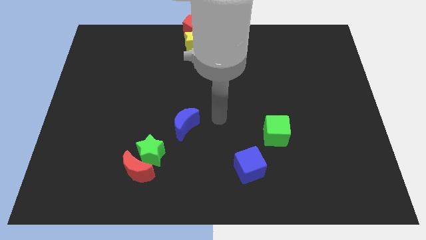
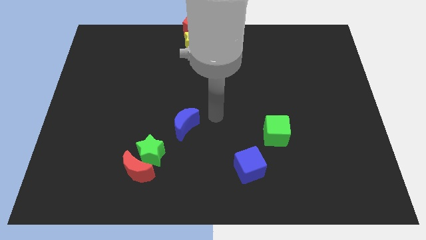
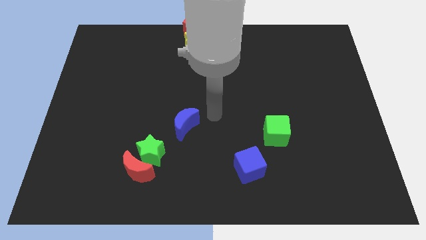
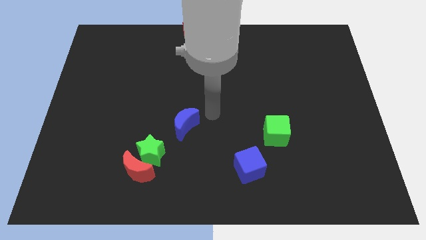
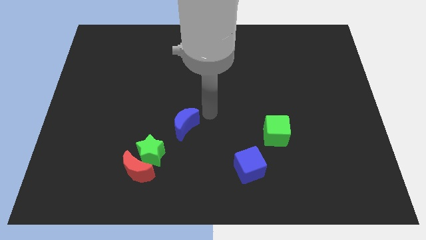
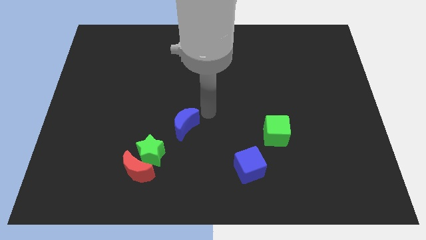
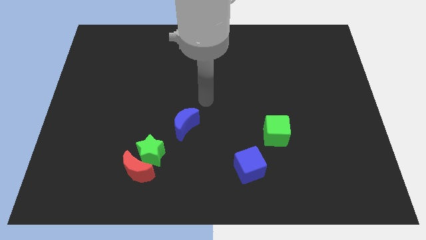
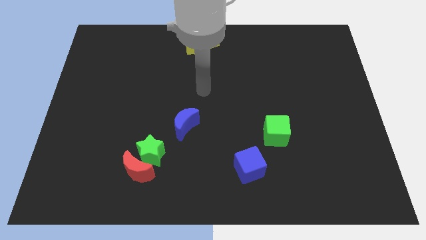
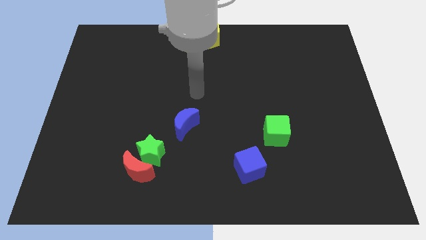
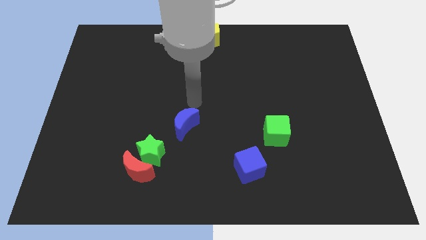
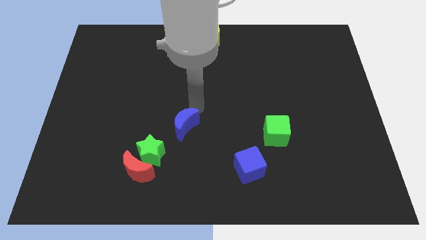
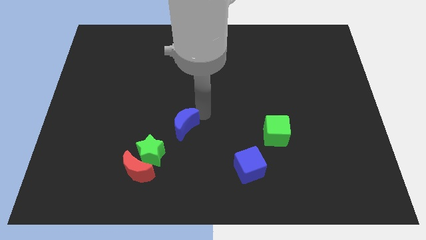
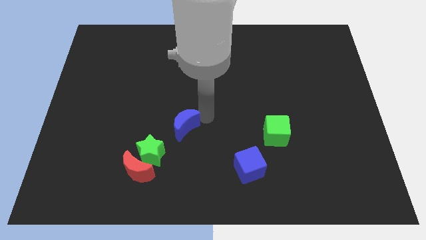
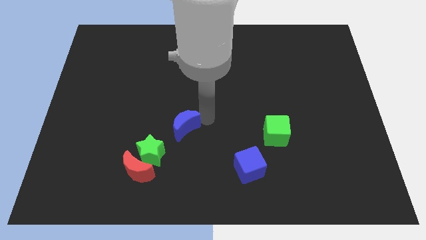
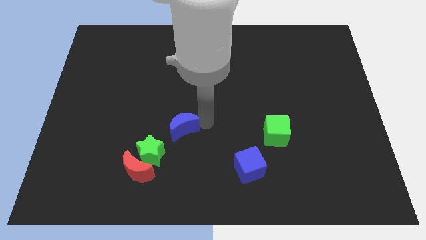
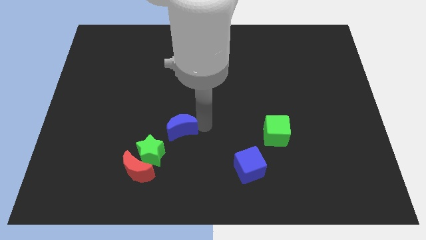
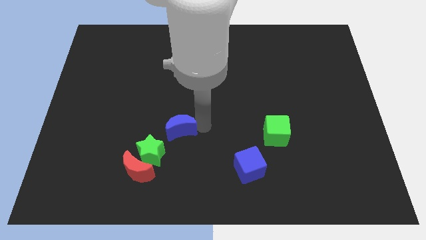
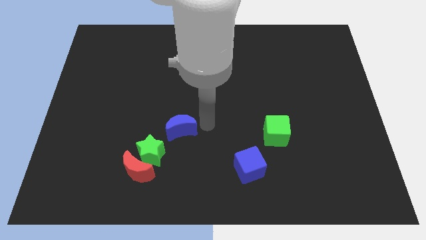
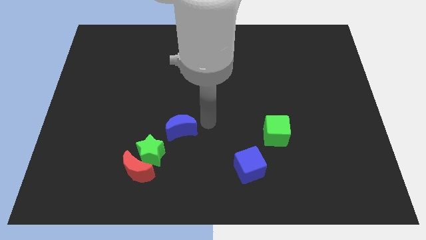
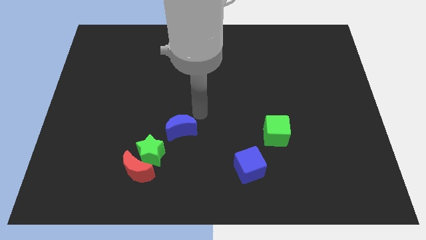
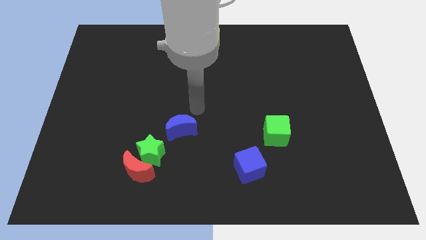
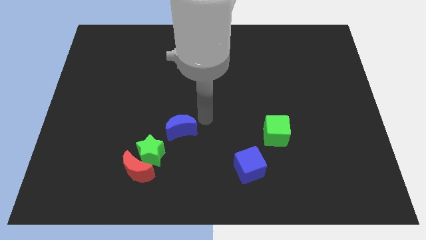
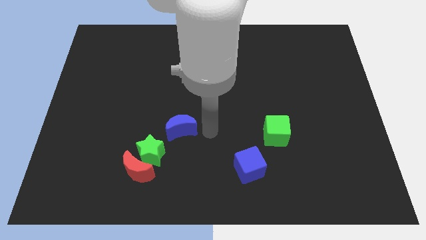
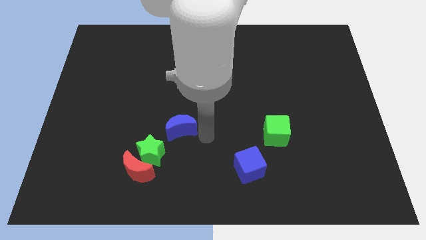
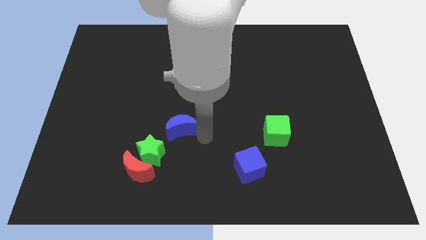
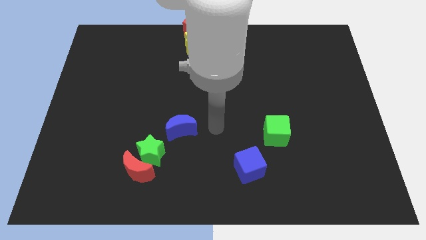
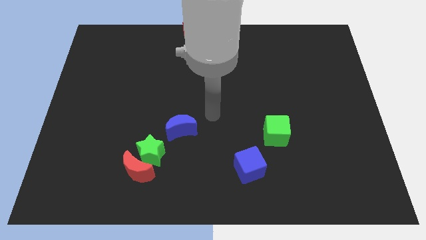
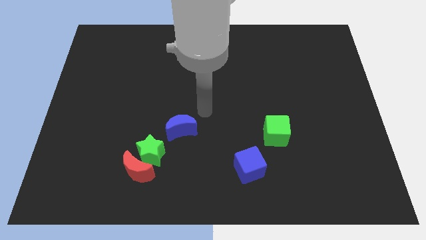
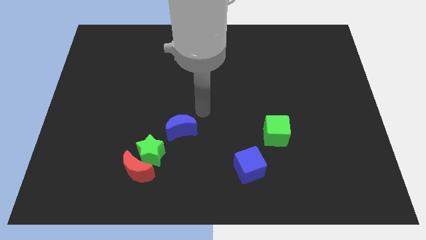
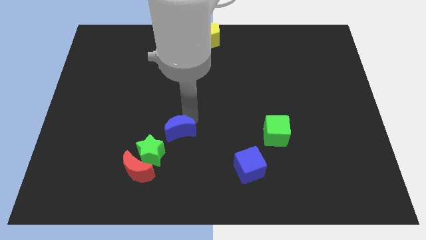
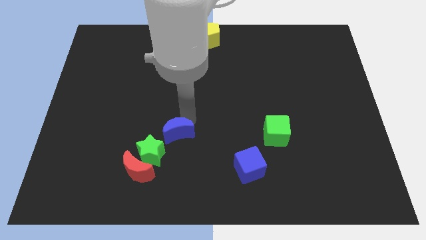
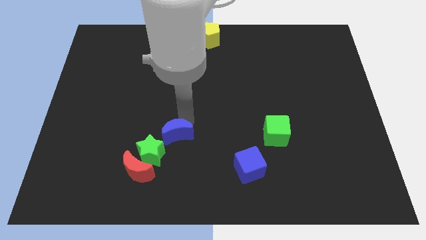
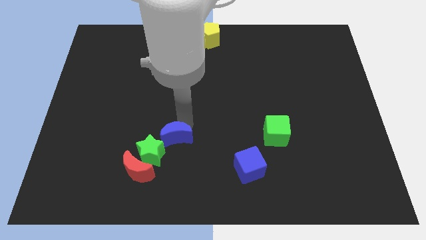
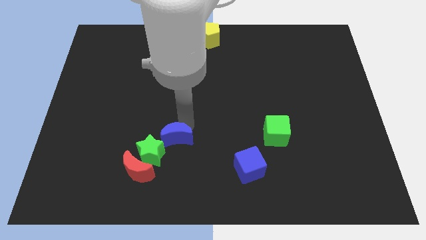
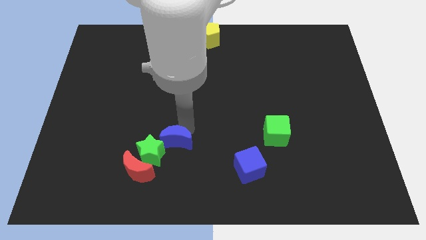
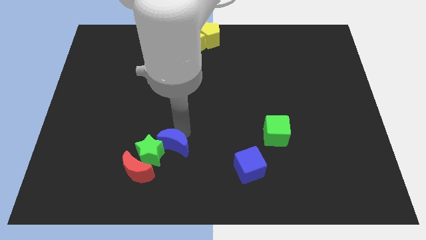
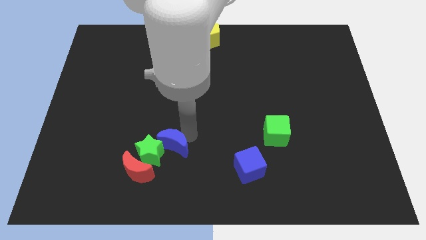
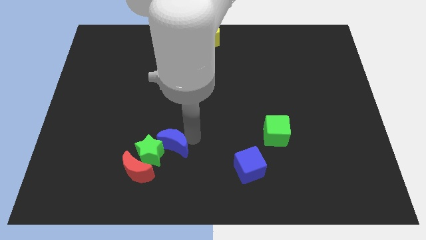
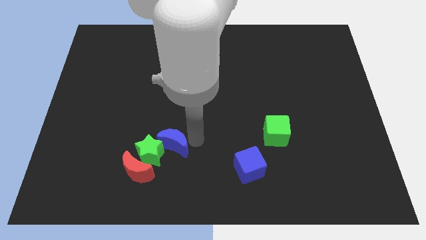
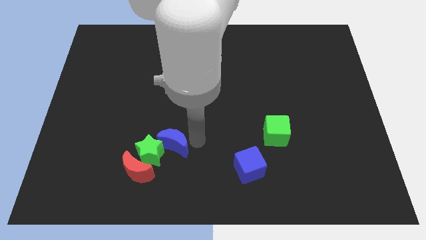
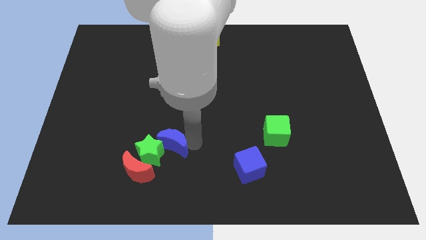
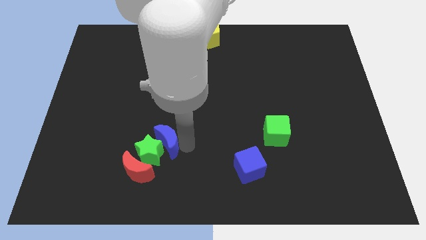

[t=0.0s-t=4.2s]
slide the blue crescent into the green star

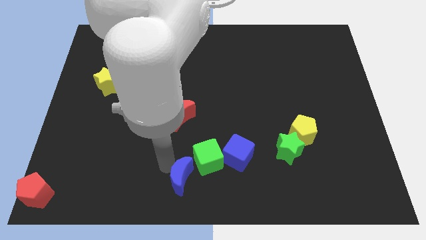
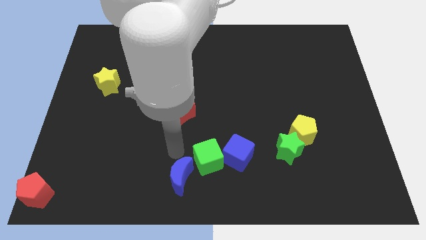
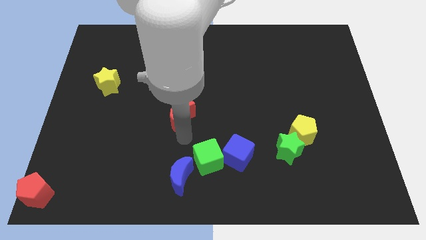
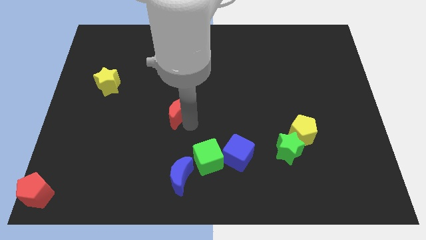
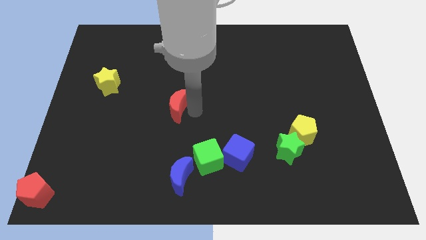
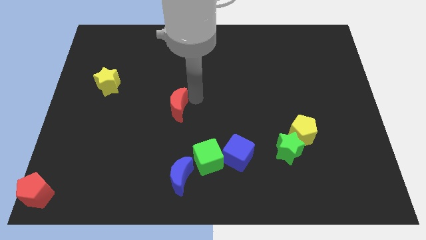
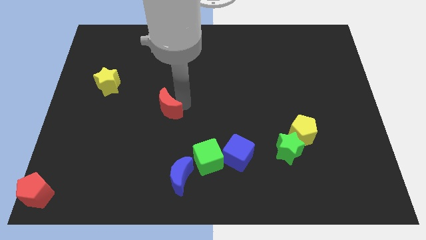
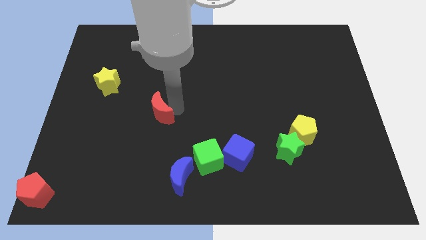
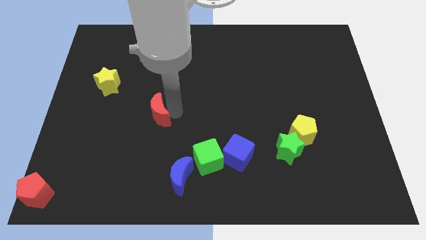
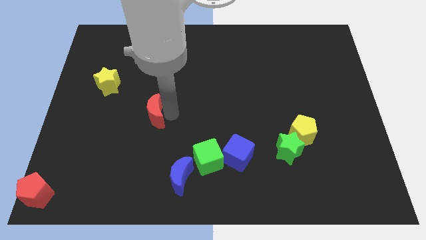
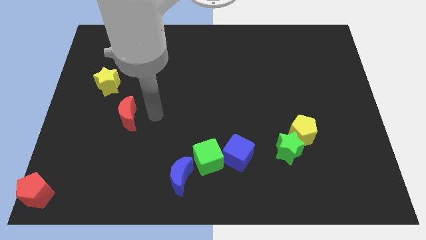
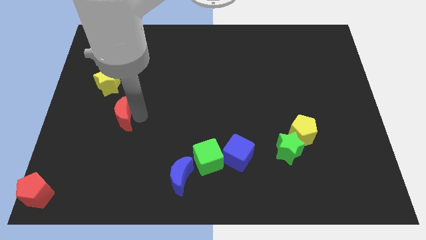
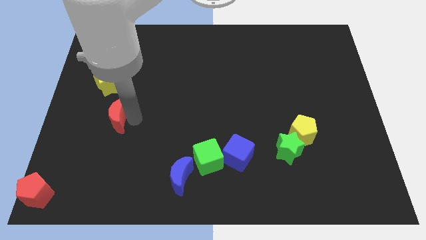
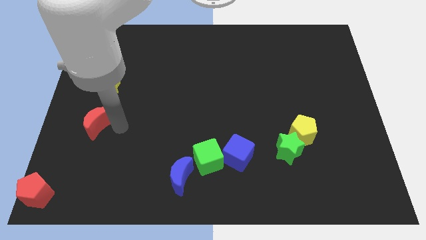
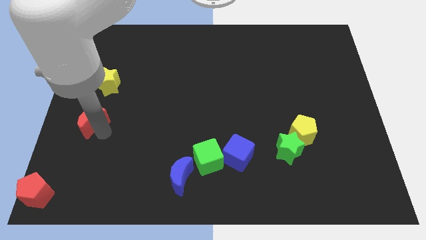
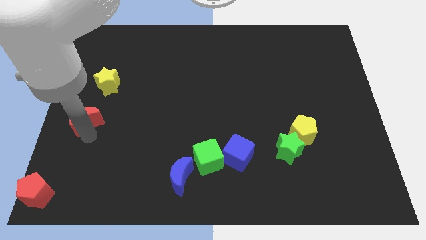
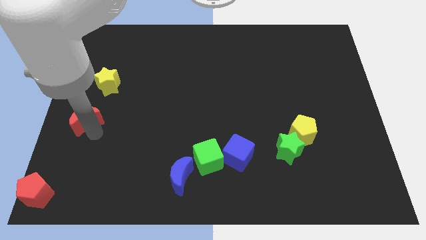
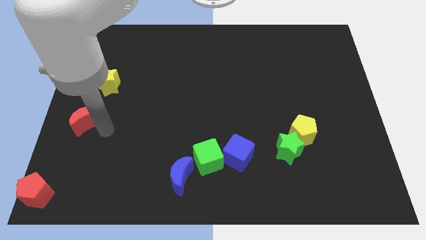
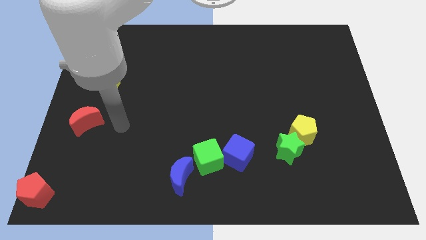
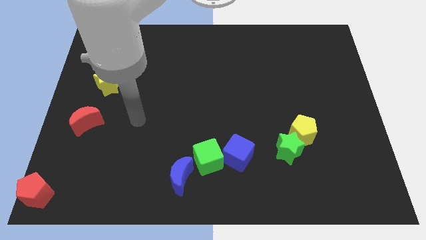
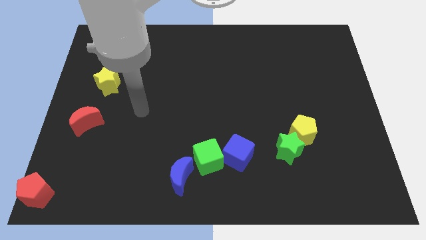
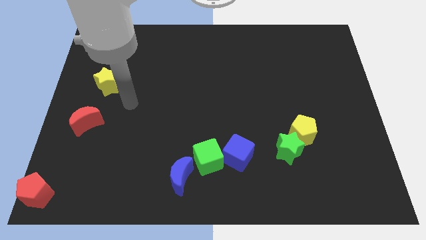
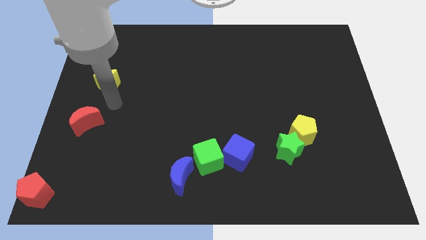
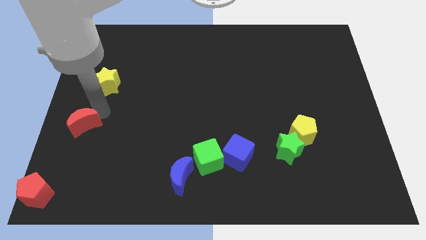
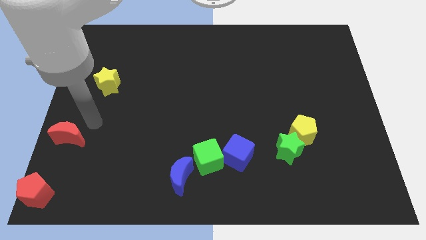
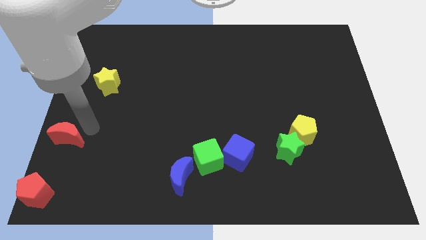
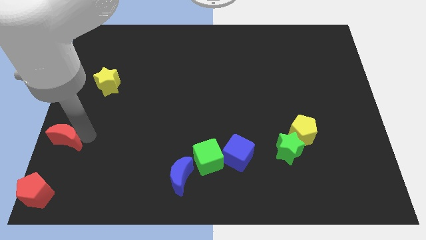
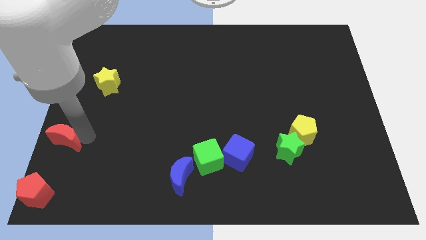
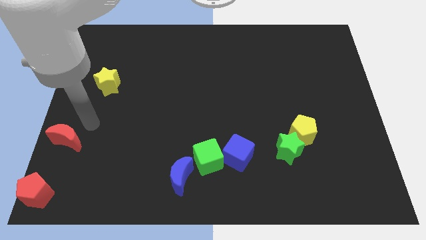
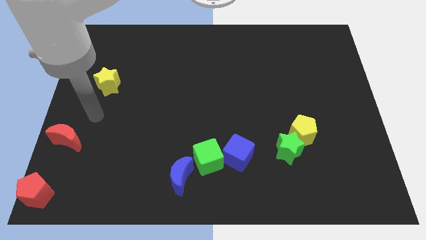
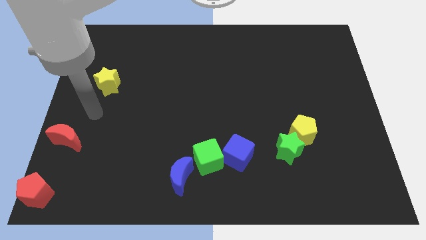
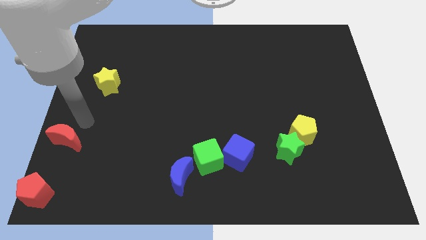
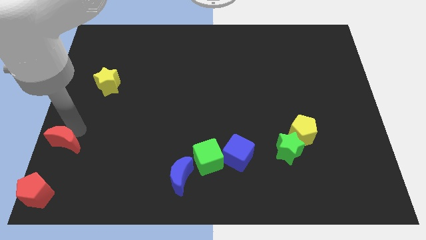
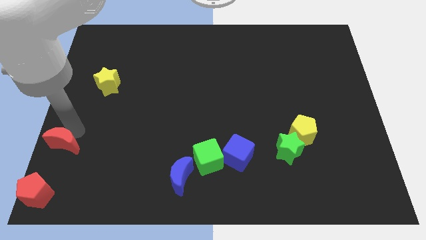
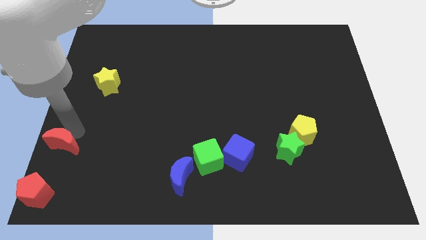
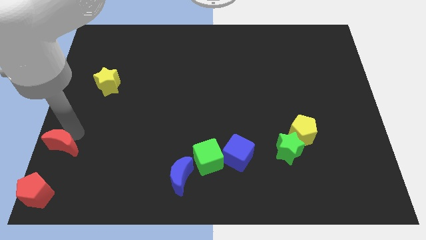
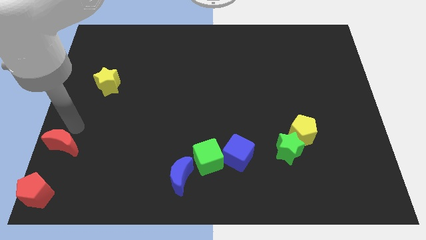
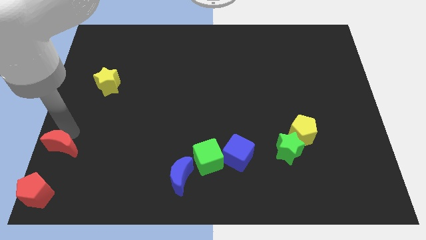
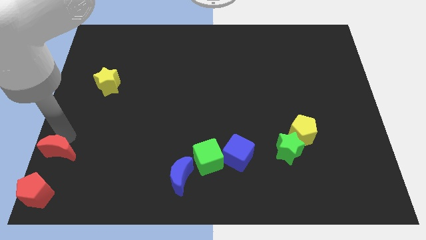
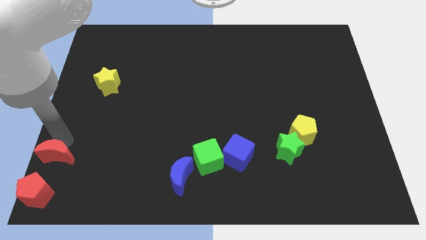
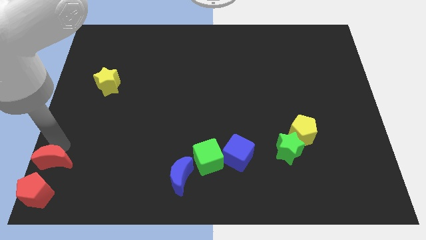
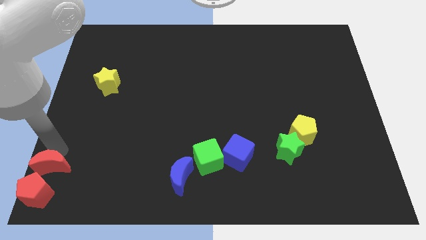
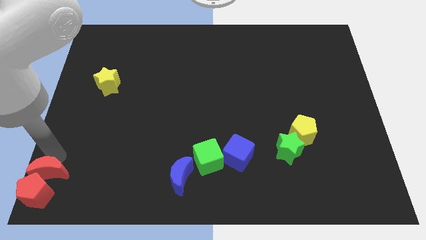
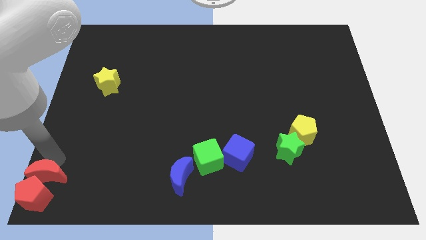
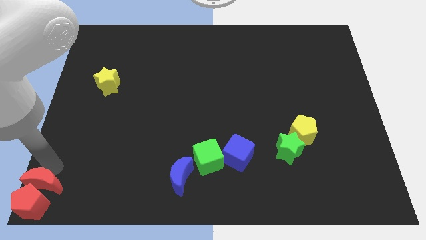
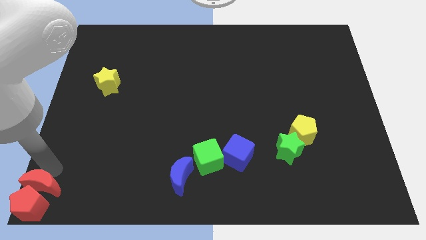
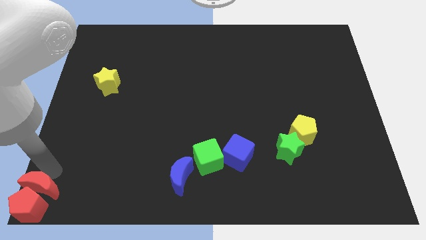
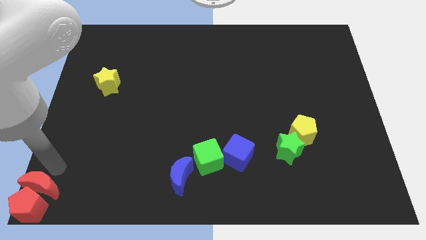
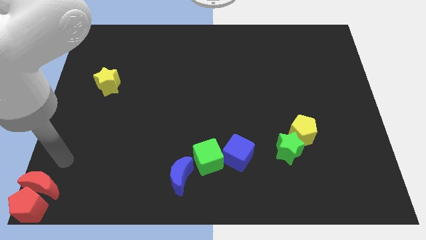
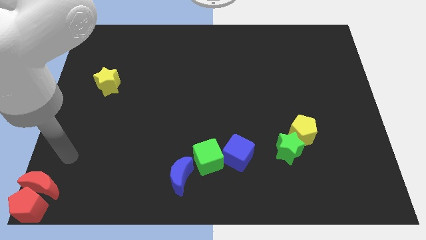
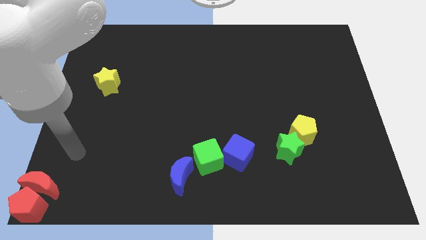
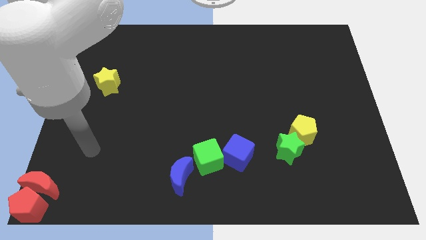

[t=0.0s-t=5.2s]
push the red crescent into the red pentagon
